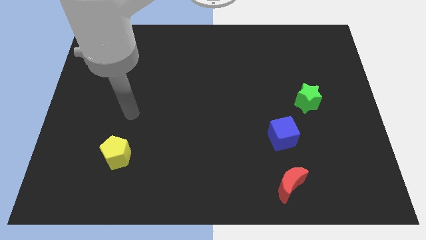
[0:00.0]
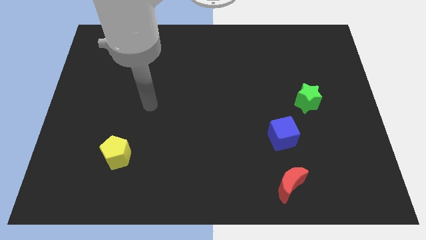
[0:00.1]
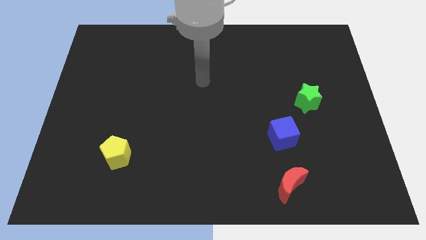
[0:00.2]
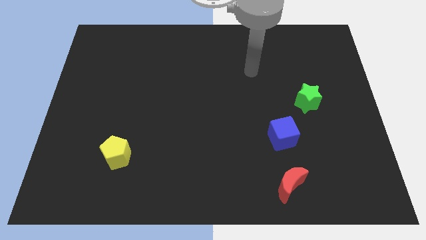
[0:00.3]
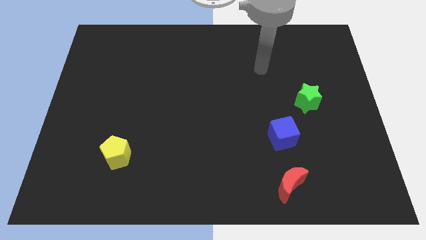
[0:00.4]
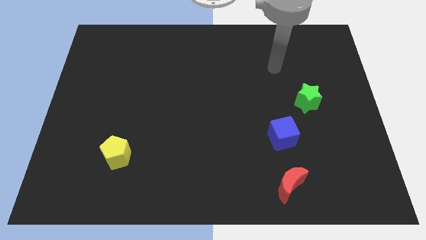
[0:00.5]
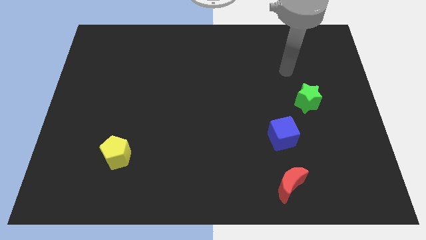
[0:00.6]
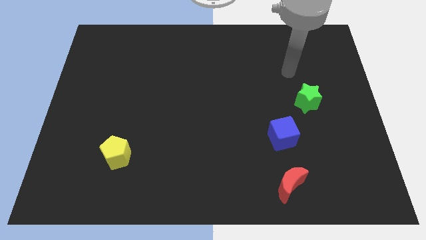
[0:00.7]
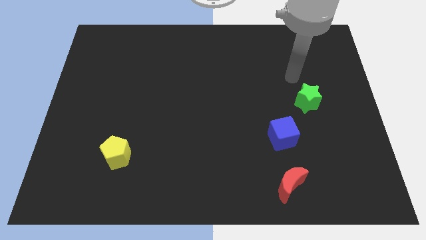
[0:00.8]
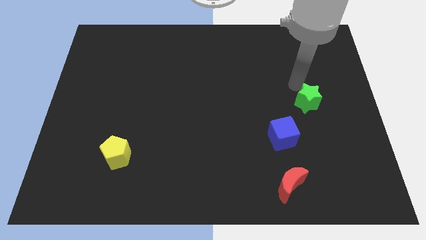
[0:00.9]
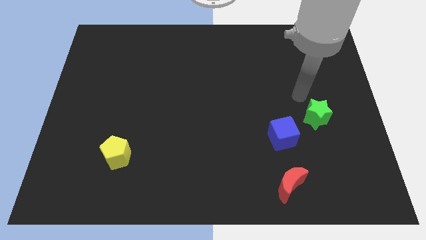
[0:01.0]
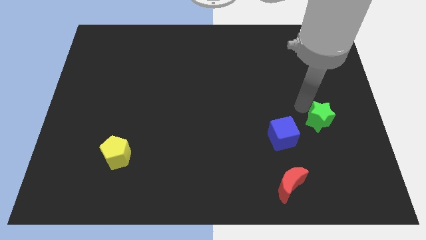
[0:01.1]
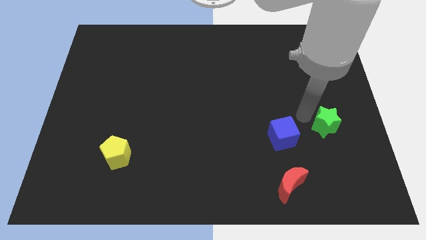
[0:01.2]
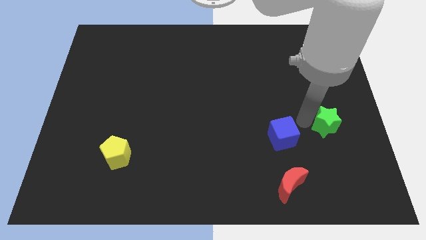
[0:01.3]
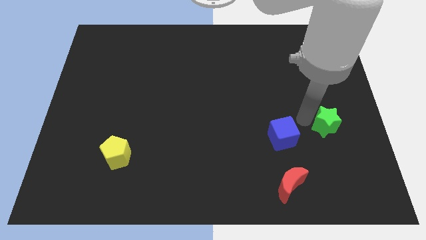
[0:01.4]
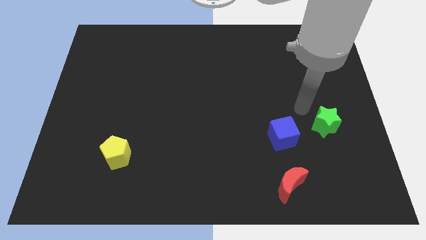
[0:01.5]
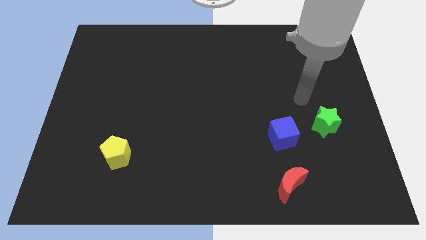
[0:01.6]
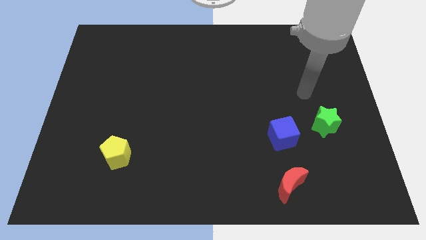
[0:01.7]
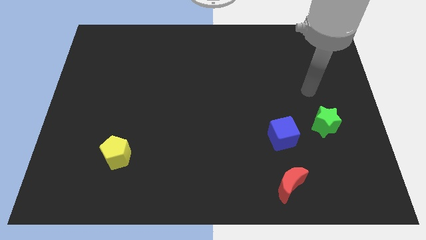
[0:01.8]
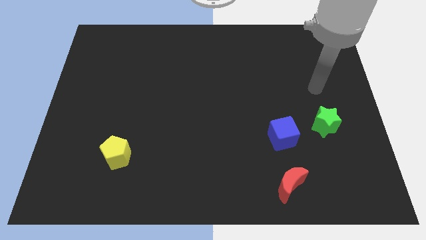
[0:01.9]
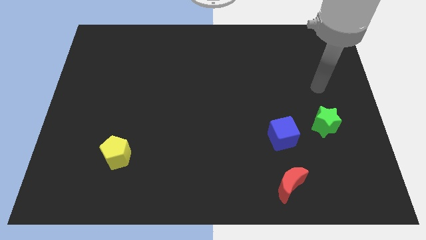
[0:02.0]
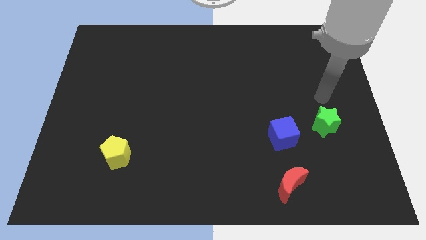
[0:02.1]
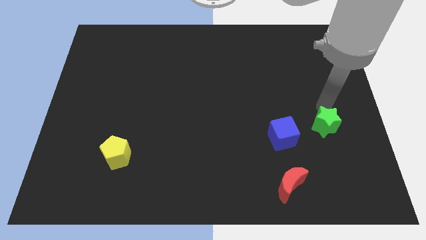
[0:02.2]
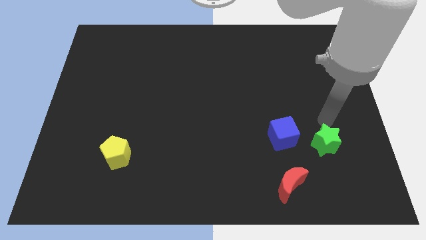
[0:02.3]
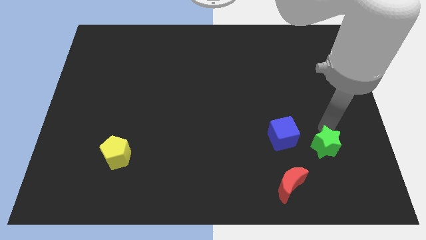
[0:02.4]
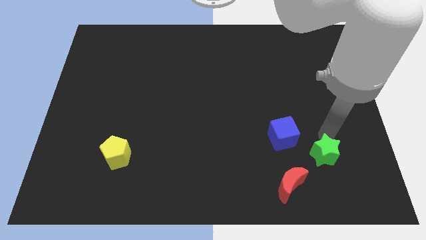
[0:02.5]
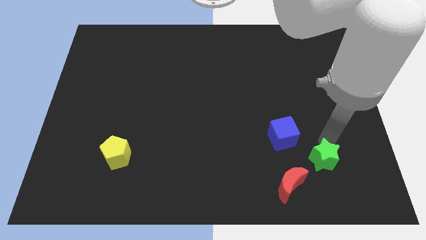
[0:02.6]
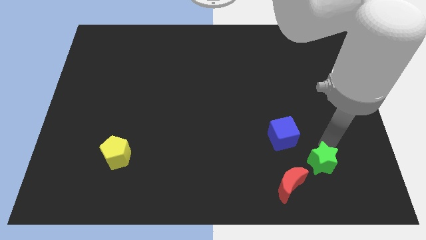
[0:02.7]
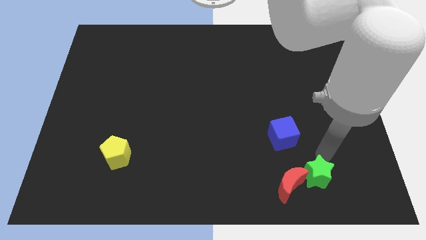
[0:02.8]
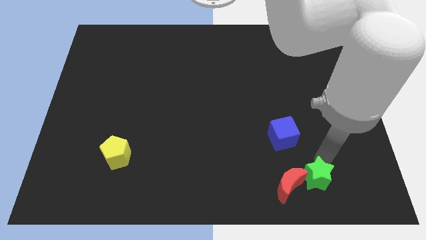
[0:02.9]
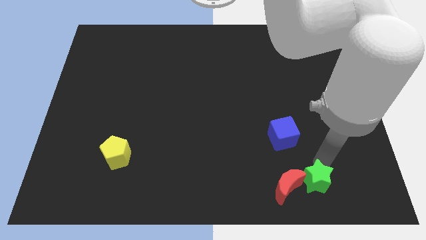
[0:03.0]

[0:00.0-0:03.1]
push the green block to the red moon

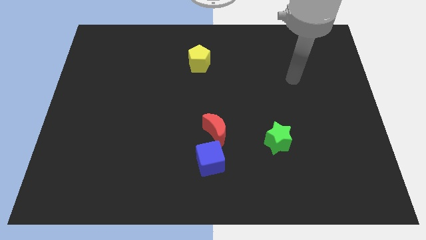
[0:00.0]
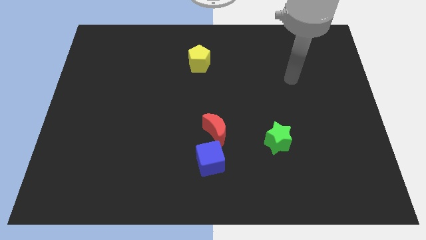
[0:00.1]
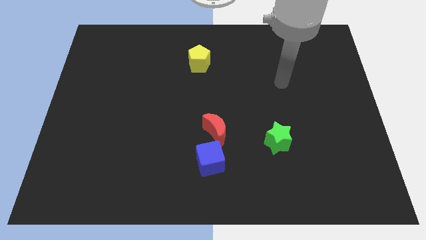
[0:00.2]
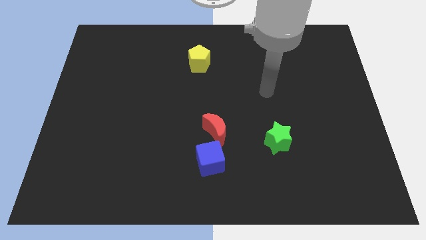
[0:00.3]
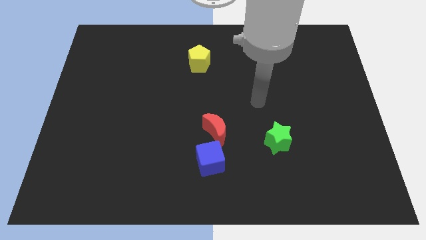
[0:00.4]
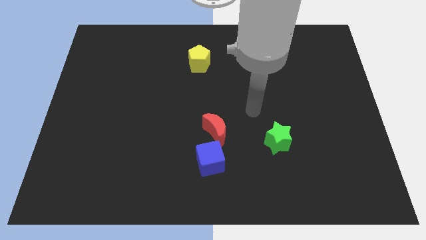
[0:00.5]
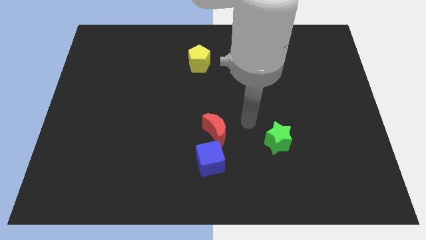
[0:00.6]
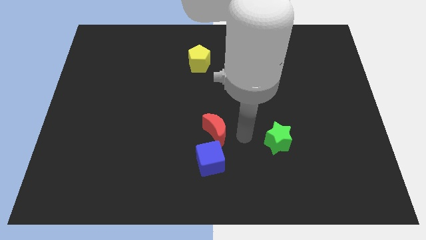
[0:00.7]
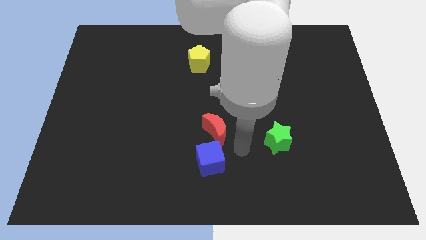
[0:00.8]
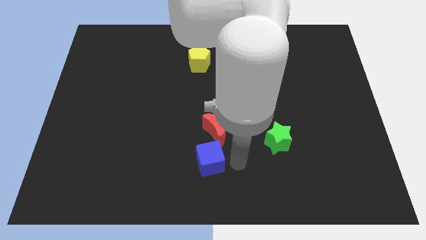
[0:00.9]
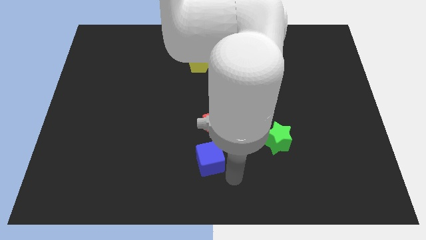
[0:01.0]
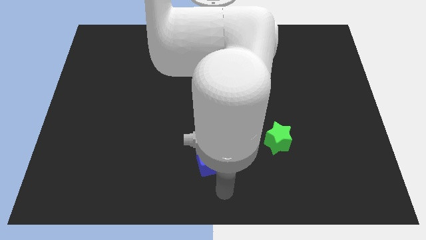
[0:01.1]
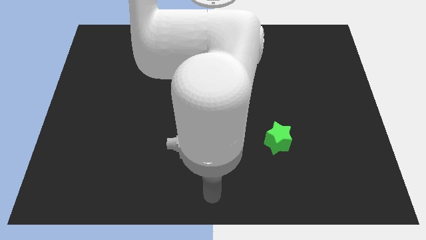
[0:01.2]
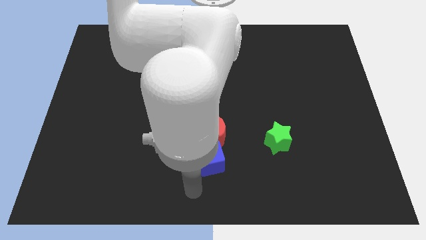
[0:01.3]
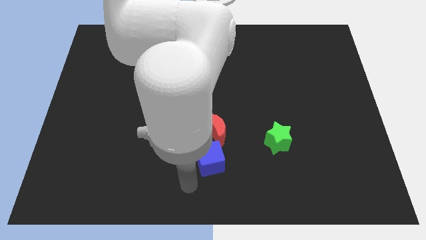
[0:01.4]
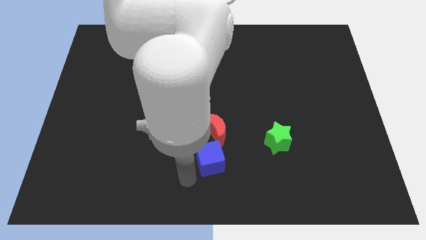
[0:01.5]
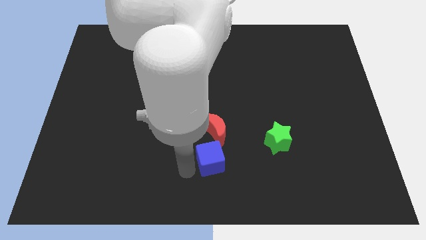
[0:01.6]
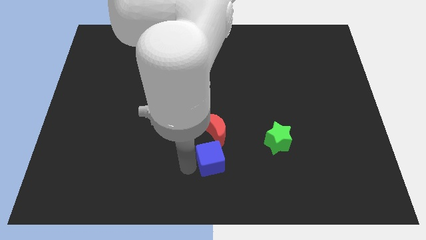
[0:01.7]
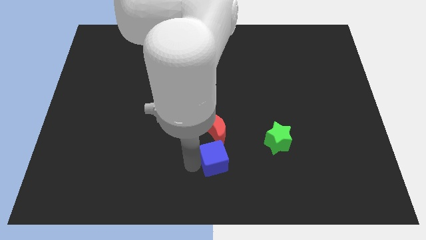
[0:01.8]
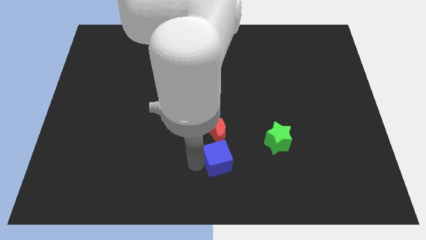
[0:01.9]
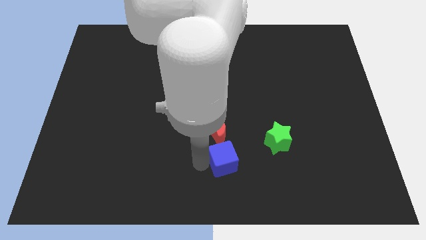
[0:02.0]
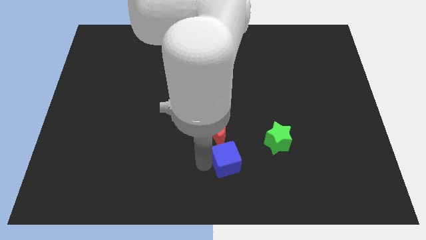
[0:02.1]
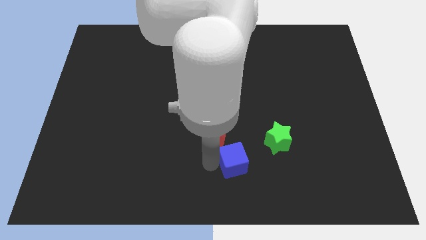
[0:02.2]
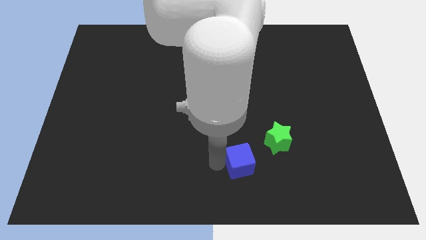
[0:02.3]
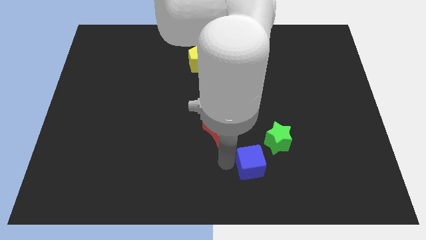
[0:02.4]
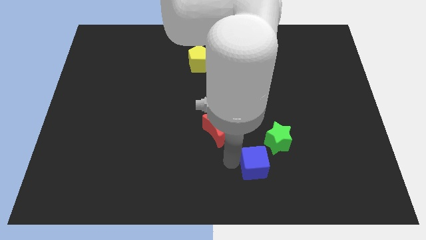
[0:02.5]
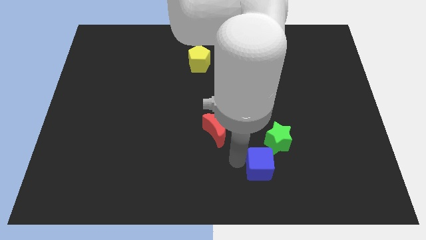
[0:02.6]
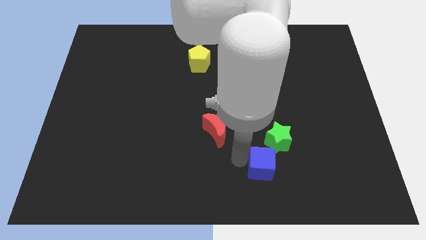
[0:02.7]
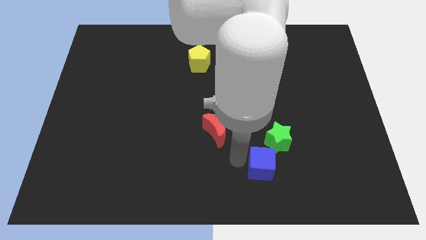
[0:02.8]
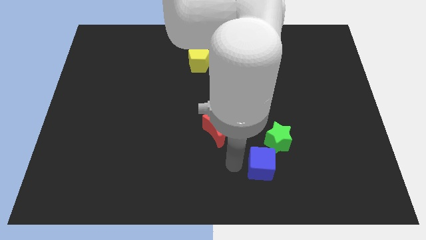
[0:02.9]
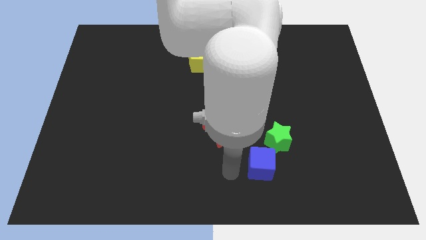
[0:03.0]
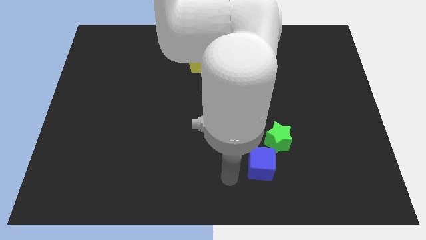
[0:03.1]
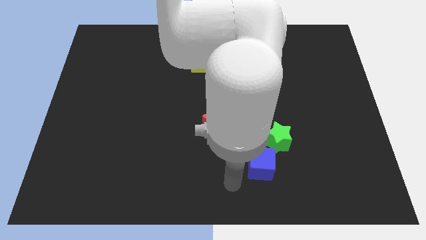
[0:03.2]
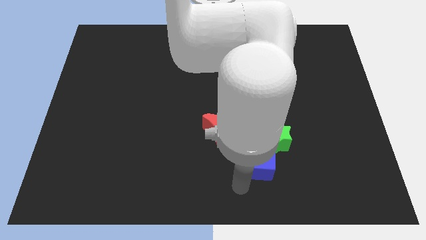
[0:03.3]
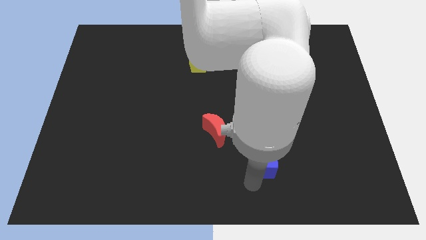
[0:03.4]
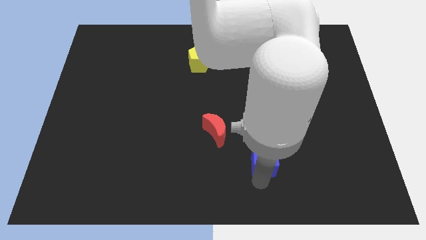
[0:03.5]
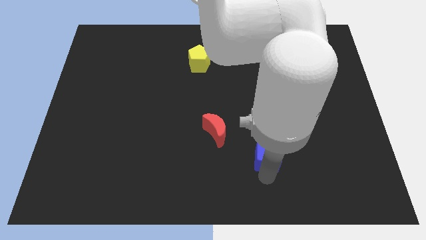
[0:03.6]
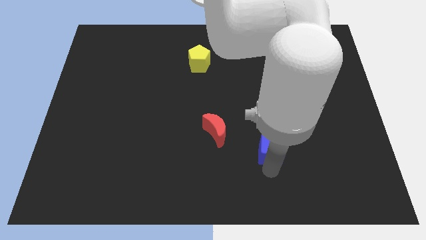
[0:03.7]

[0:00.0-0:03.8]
push the blue block to the green star

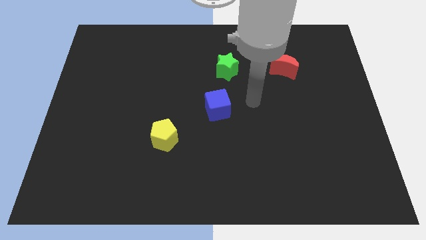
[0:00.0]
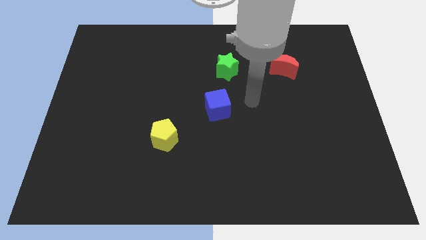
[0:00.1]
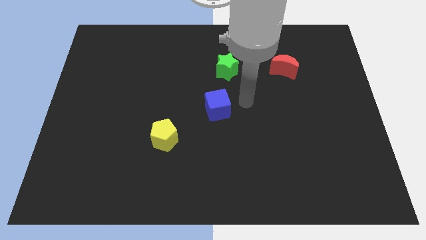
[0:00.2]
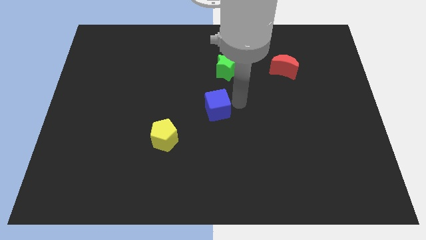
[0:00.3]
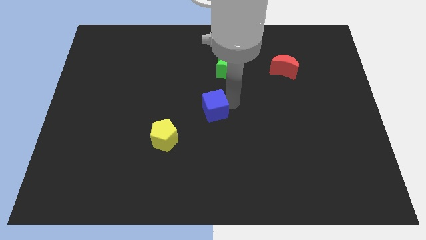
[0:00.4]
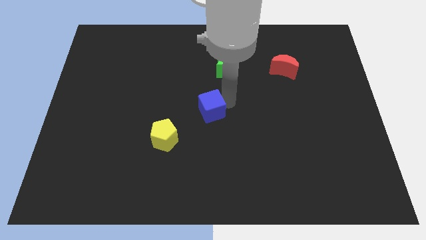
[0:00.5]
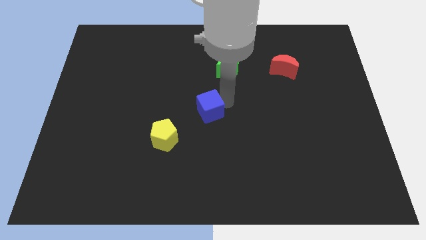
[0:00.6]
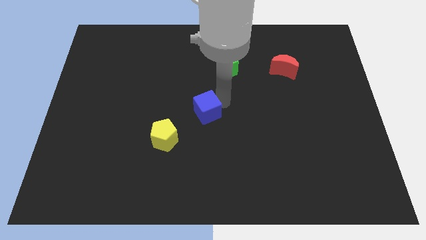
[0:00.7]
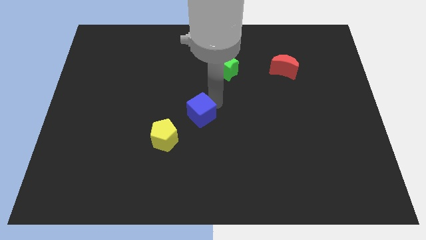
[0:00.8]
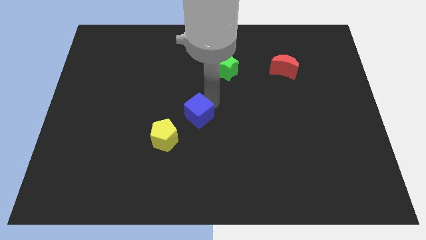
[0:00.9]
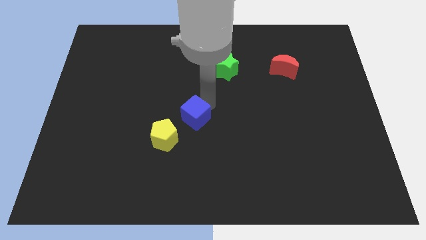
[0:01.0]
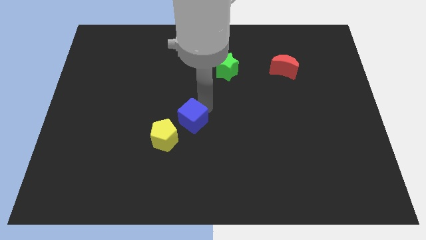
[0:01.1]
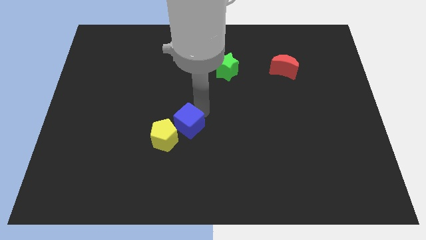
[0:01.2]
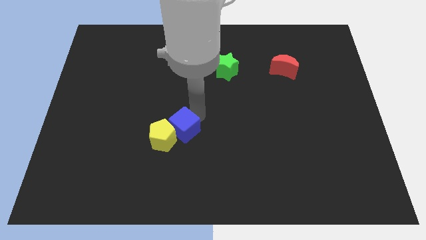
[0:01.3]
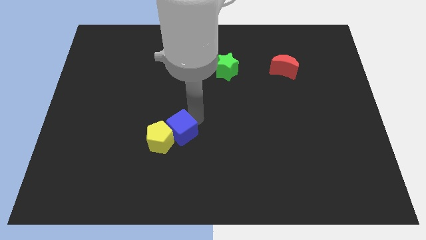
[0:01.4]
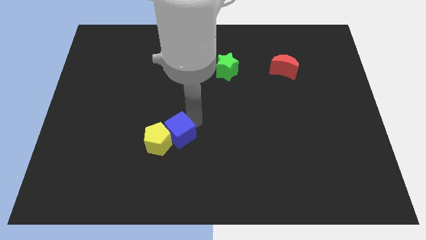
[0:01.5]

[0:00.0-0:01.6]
push the blue cube to the pentagon
